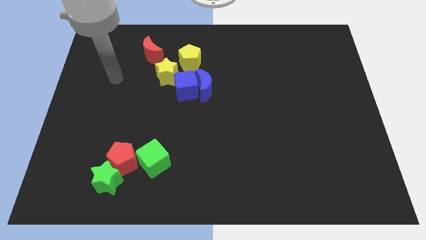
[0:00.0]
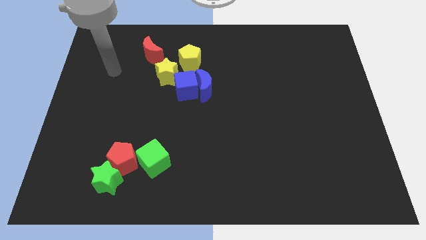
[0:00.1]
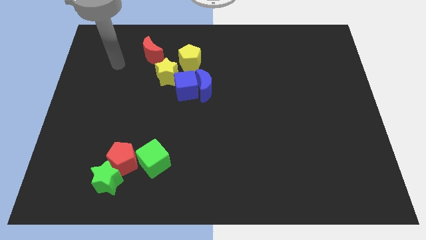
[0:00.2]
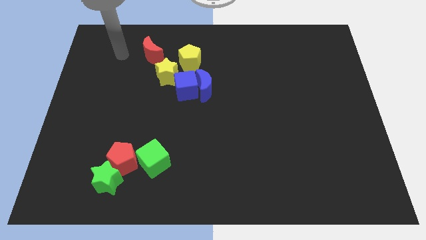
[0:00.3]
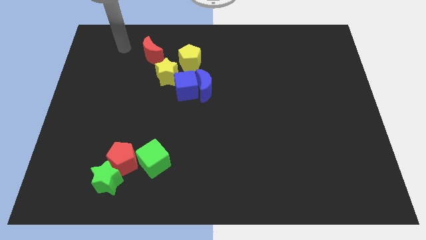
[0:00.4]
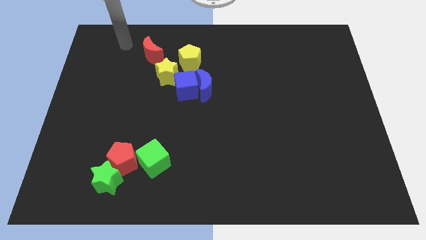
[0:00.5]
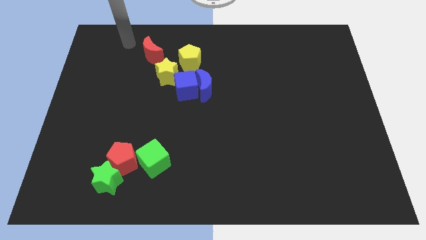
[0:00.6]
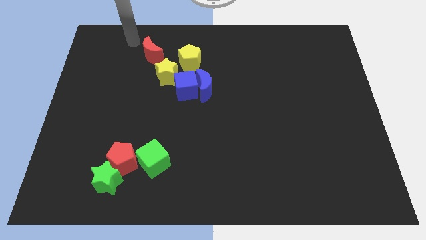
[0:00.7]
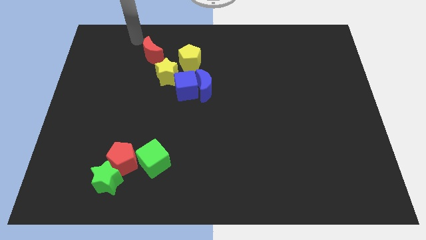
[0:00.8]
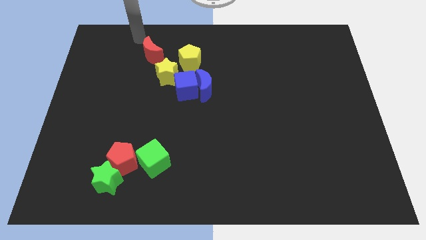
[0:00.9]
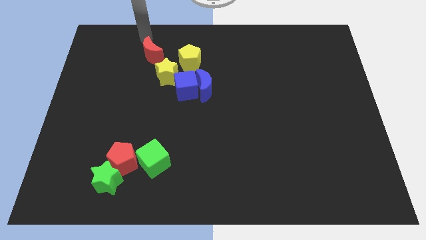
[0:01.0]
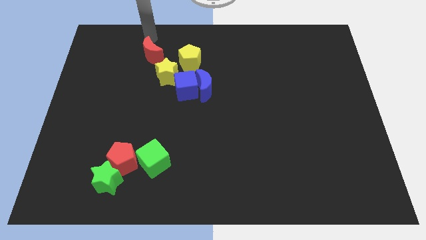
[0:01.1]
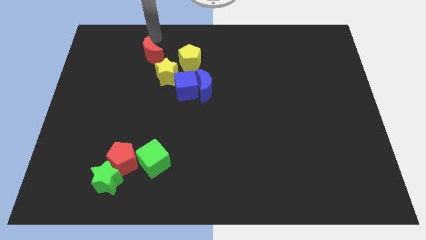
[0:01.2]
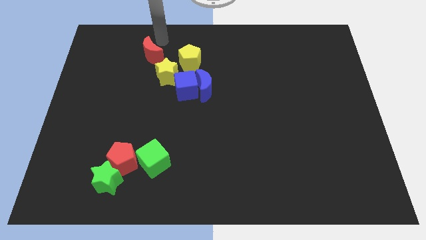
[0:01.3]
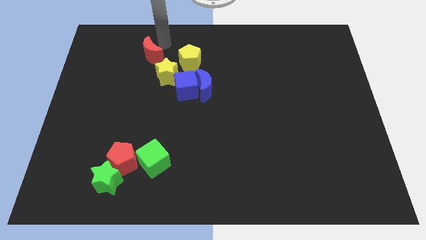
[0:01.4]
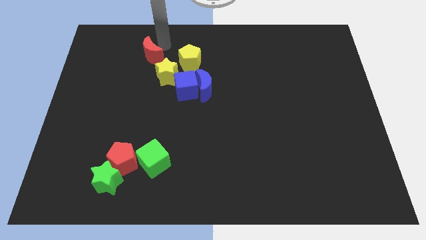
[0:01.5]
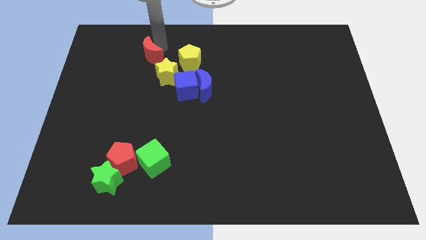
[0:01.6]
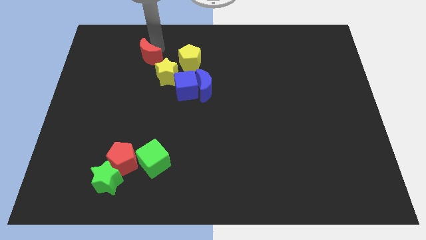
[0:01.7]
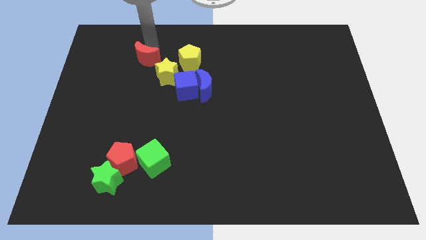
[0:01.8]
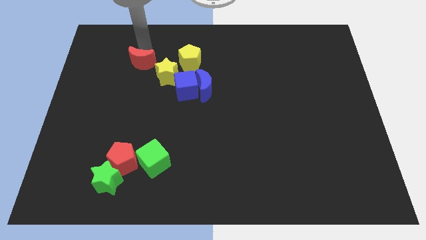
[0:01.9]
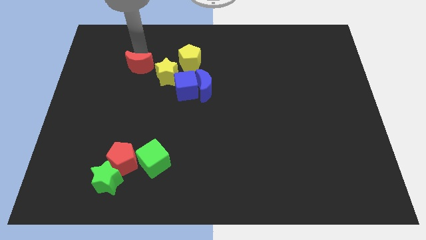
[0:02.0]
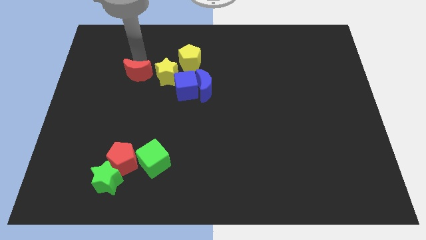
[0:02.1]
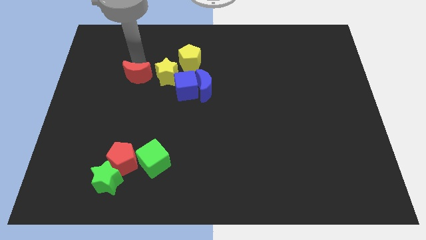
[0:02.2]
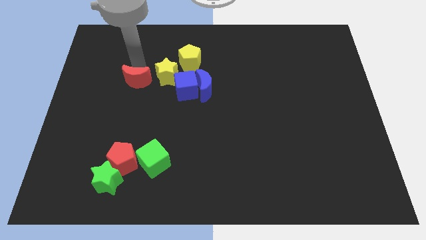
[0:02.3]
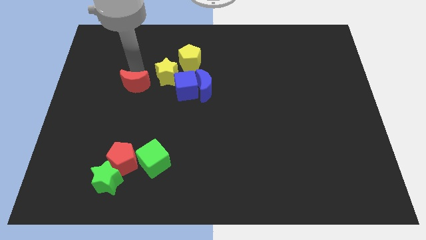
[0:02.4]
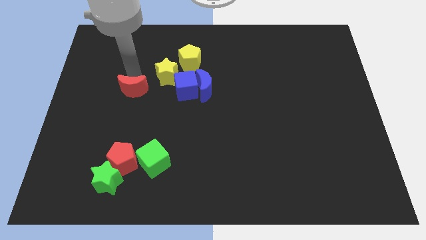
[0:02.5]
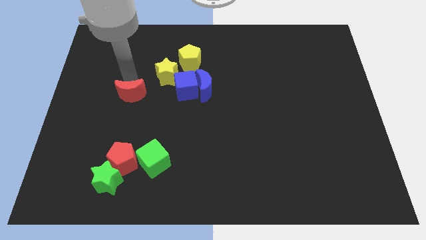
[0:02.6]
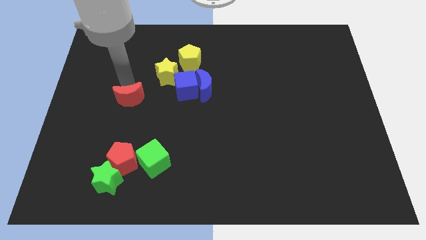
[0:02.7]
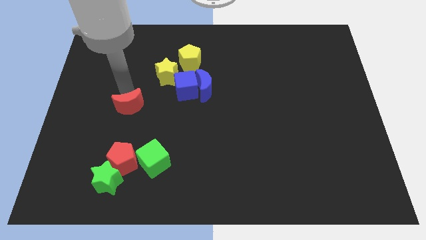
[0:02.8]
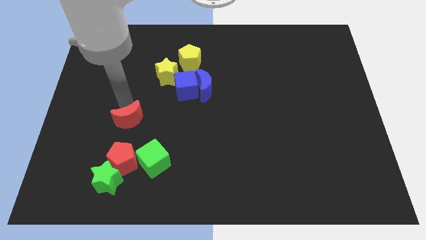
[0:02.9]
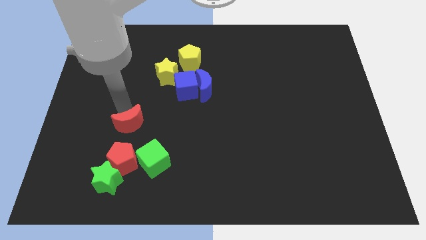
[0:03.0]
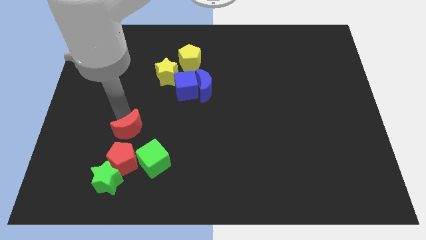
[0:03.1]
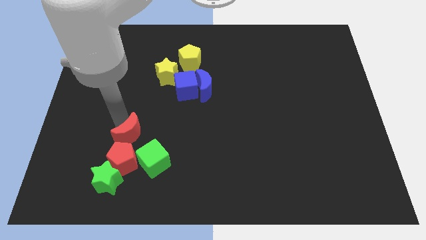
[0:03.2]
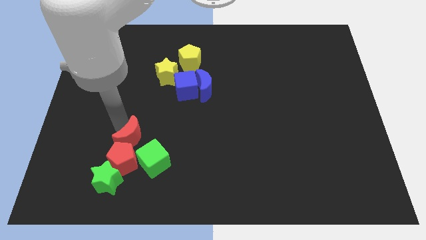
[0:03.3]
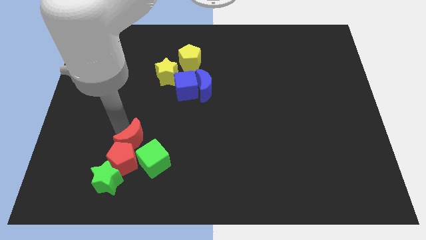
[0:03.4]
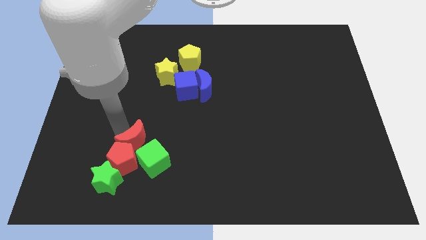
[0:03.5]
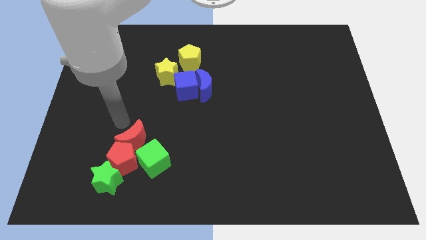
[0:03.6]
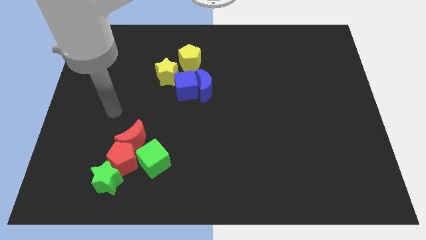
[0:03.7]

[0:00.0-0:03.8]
place the red crescent on top of red pentagon

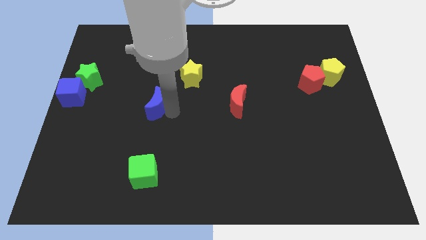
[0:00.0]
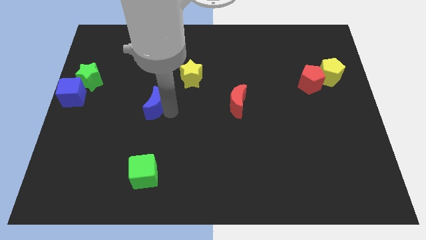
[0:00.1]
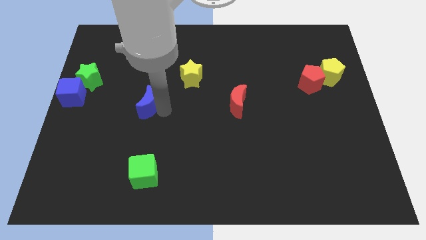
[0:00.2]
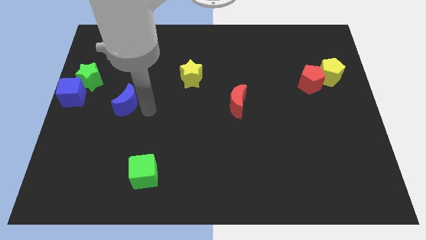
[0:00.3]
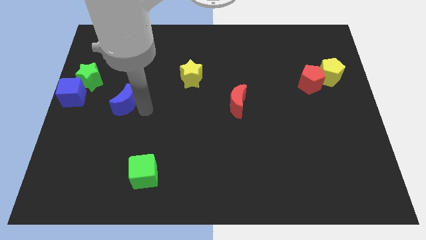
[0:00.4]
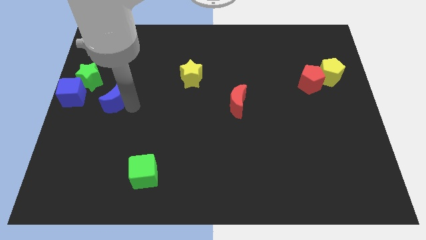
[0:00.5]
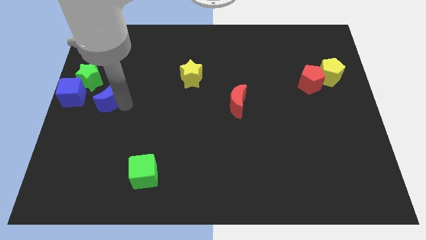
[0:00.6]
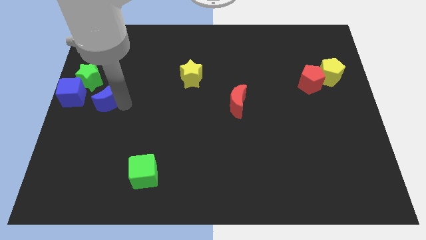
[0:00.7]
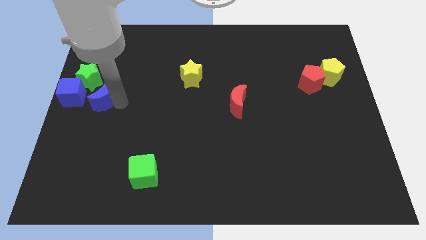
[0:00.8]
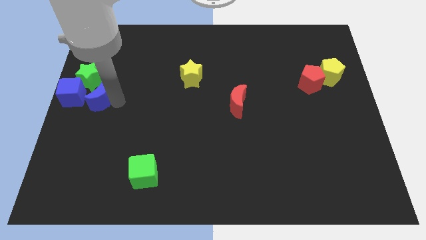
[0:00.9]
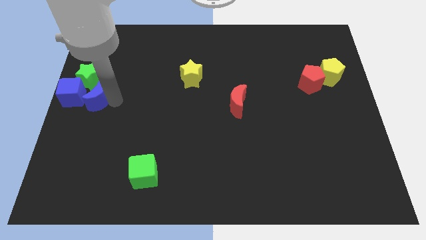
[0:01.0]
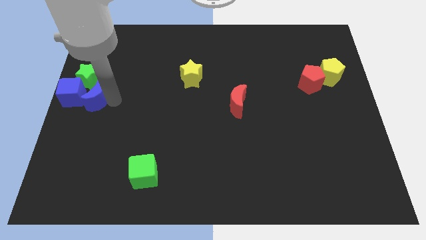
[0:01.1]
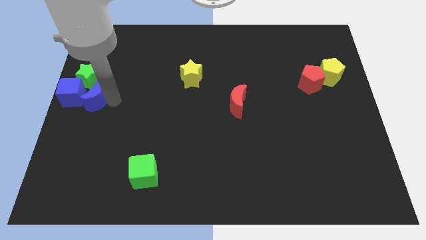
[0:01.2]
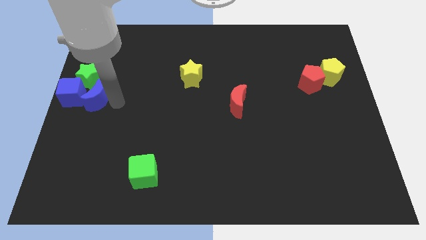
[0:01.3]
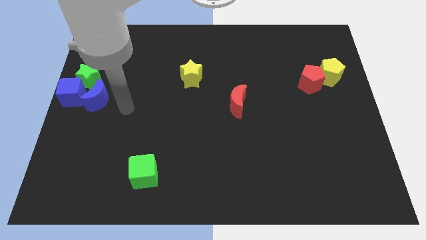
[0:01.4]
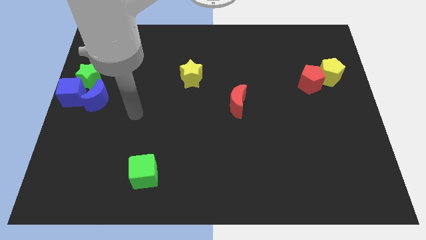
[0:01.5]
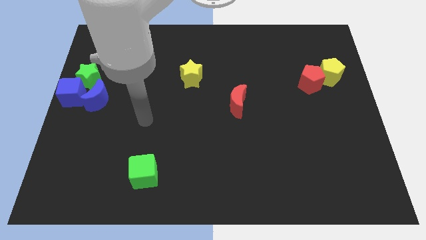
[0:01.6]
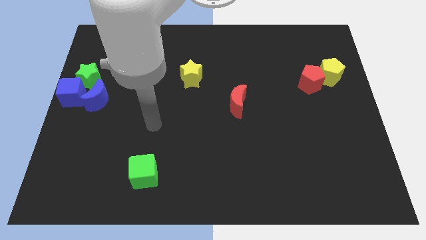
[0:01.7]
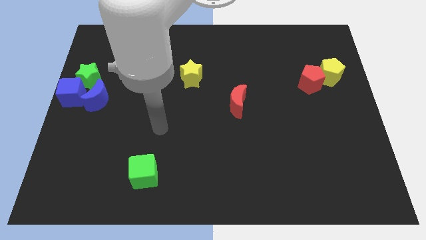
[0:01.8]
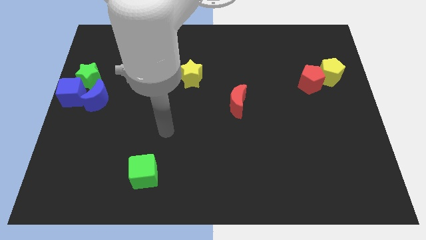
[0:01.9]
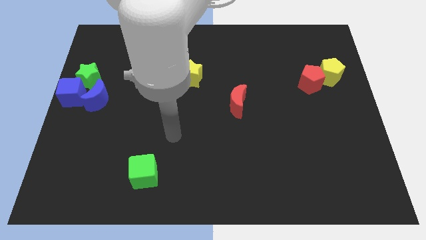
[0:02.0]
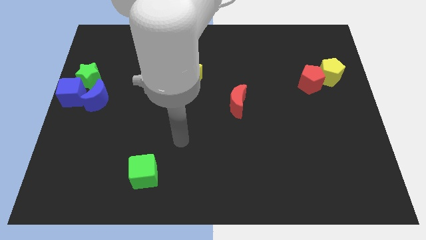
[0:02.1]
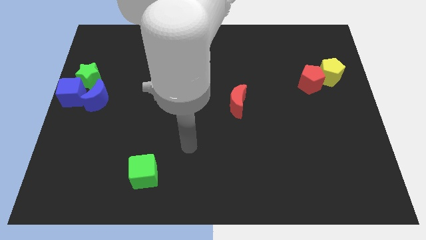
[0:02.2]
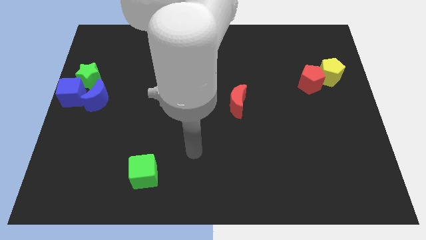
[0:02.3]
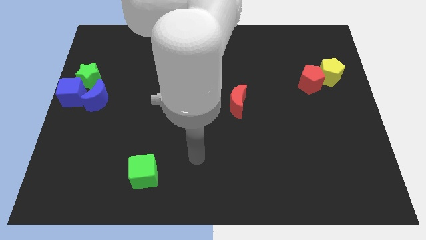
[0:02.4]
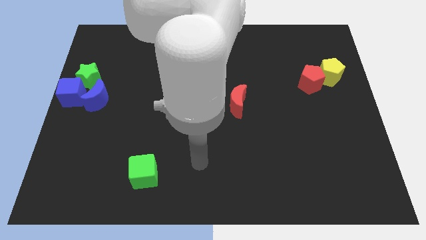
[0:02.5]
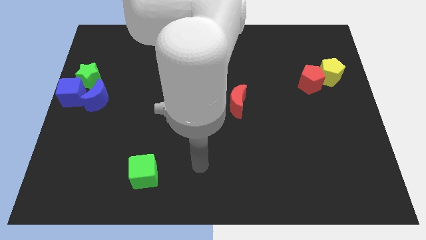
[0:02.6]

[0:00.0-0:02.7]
move the blue moon to the right of blue cube

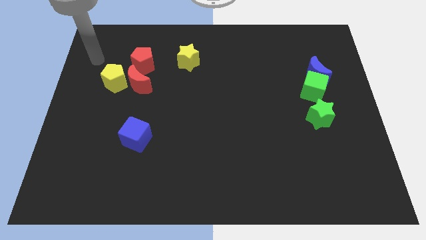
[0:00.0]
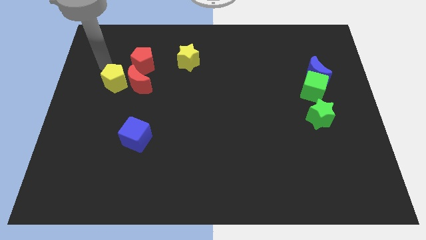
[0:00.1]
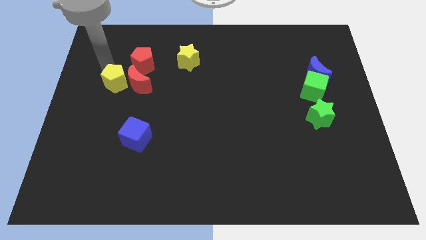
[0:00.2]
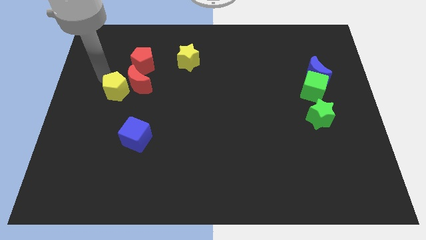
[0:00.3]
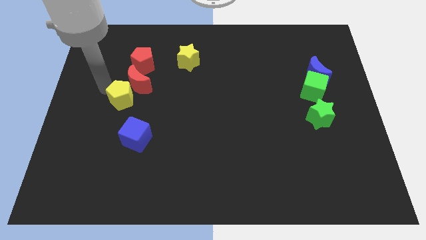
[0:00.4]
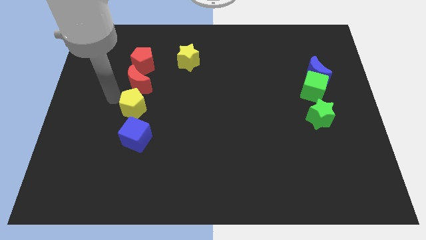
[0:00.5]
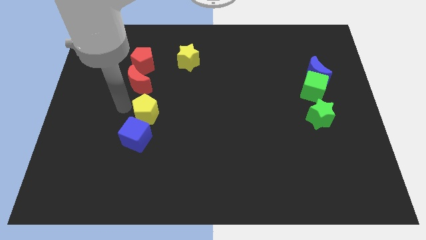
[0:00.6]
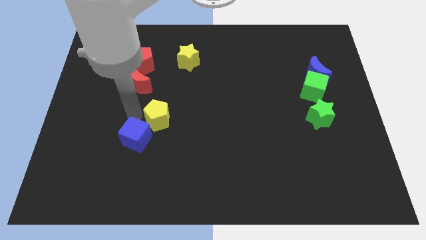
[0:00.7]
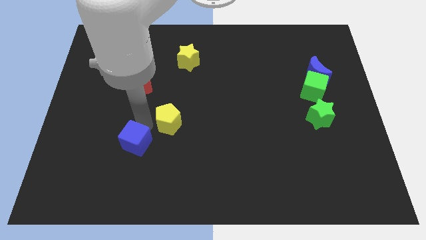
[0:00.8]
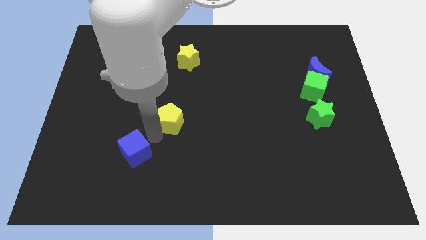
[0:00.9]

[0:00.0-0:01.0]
place your arm between yellow pentagon and blue cube

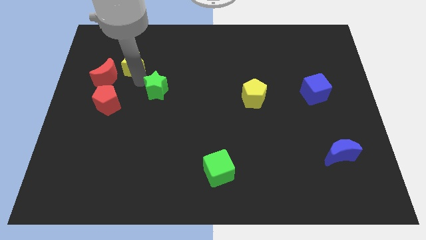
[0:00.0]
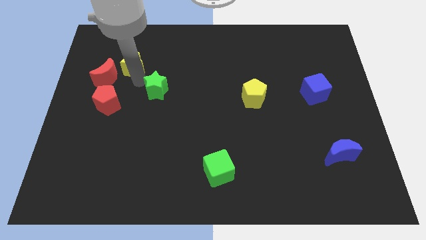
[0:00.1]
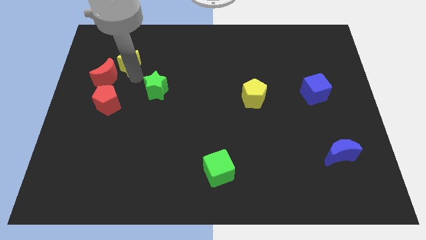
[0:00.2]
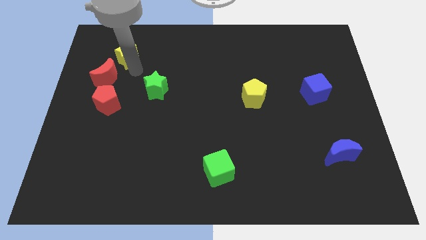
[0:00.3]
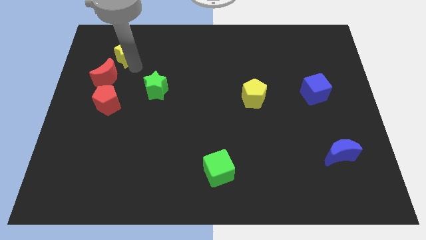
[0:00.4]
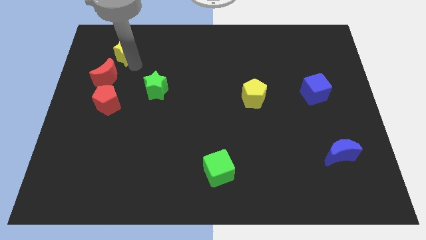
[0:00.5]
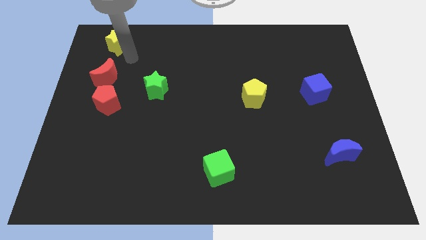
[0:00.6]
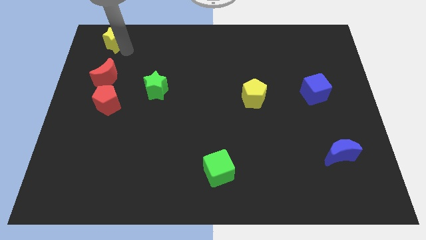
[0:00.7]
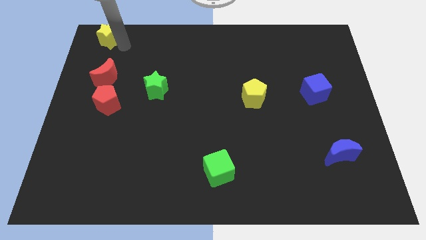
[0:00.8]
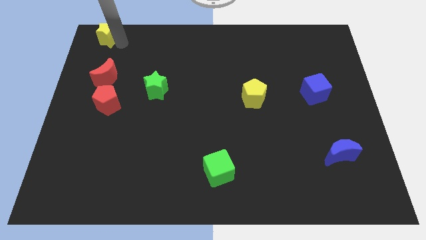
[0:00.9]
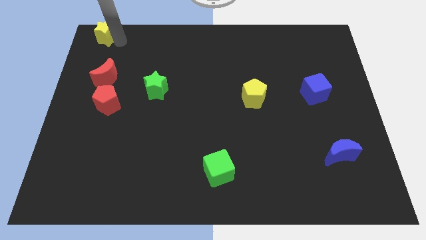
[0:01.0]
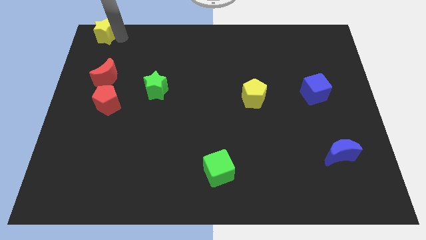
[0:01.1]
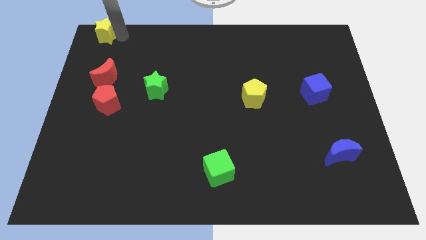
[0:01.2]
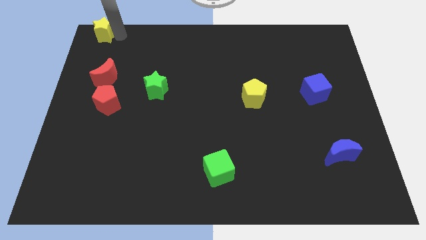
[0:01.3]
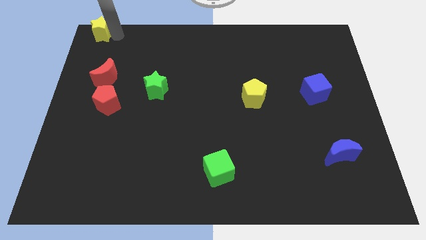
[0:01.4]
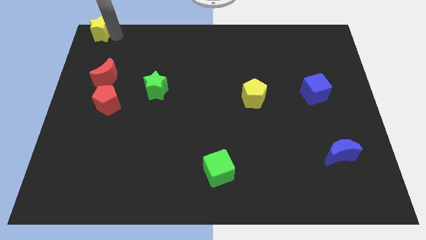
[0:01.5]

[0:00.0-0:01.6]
place the yellow star above the red moon
